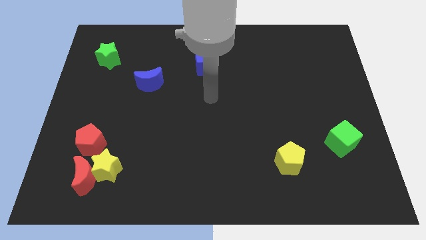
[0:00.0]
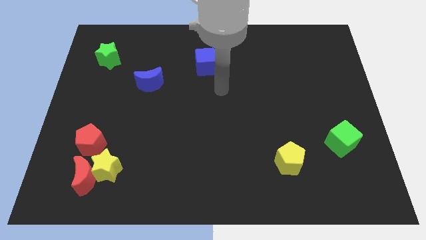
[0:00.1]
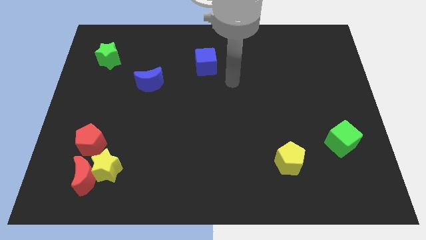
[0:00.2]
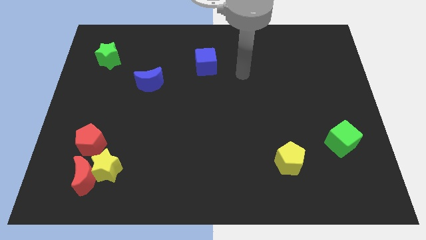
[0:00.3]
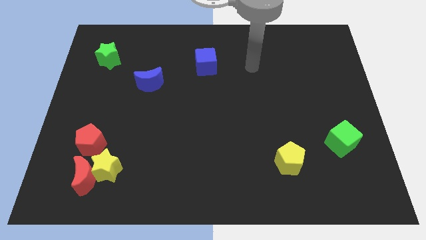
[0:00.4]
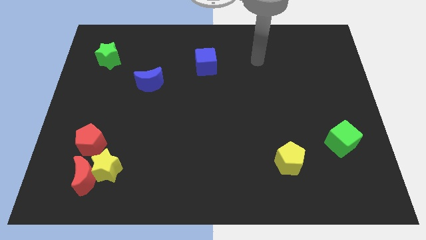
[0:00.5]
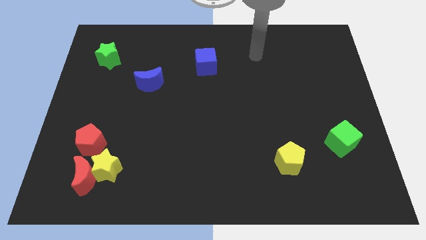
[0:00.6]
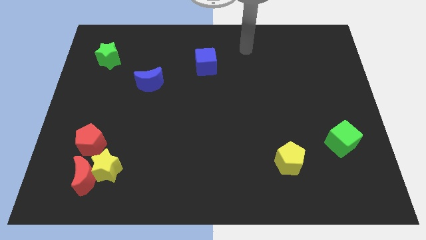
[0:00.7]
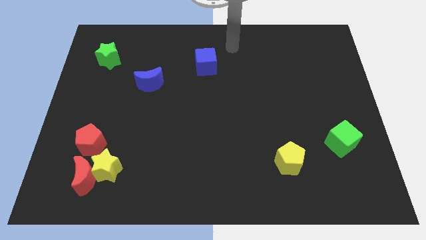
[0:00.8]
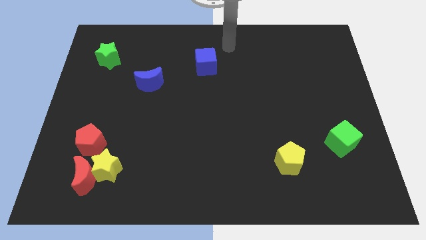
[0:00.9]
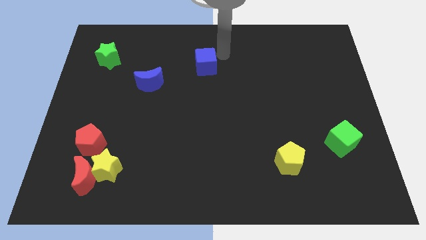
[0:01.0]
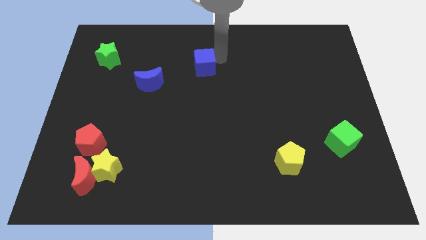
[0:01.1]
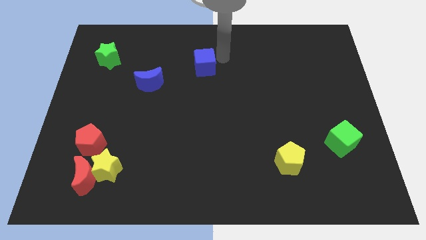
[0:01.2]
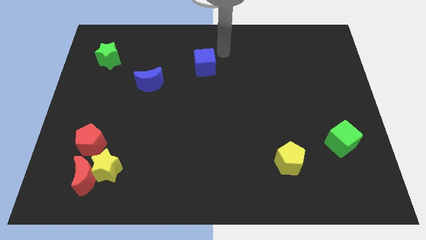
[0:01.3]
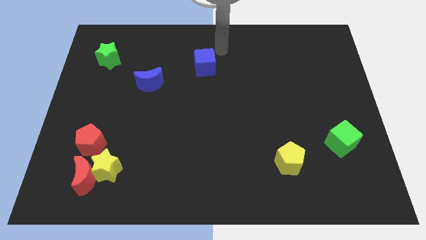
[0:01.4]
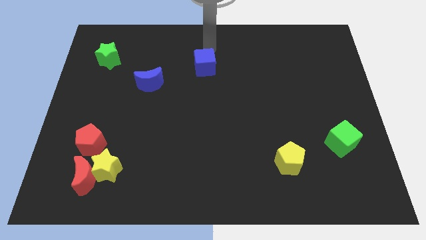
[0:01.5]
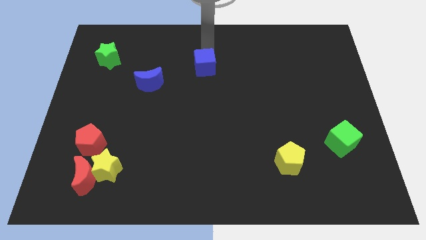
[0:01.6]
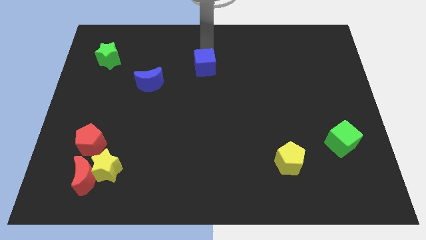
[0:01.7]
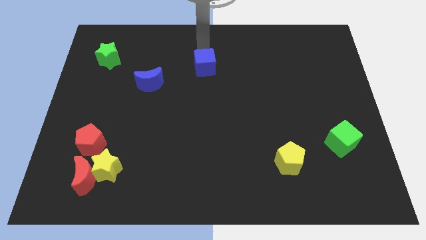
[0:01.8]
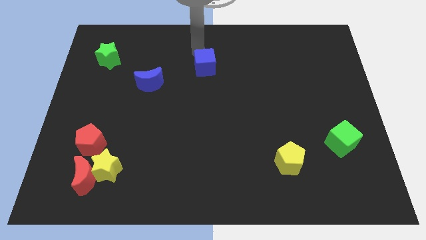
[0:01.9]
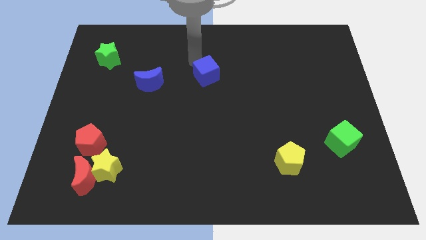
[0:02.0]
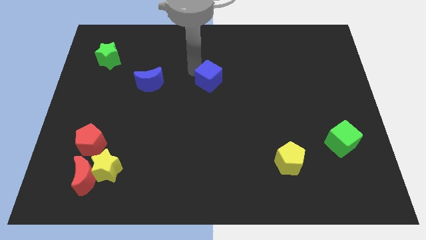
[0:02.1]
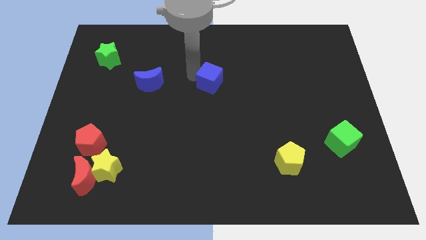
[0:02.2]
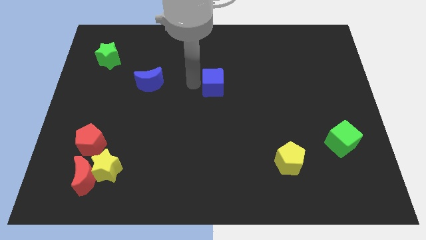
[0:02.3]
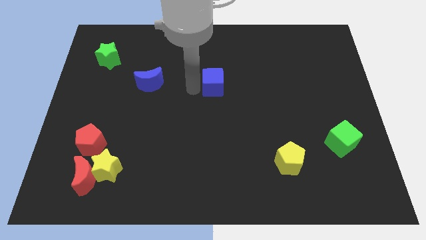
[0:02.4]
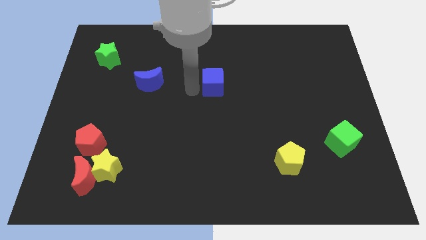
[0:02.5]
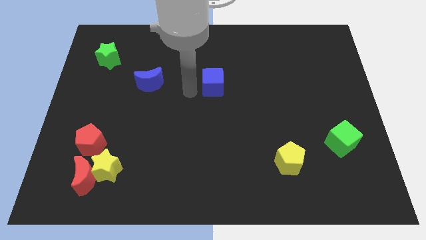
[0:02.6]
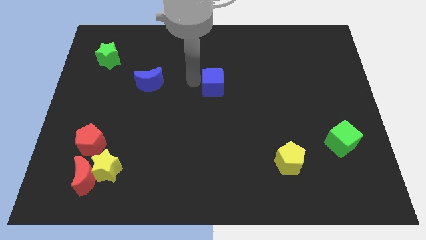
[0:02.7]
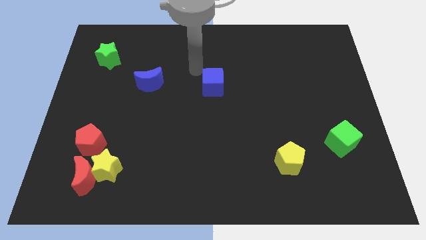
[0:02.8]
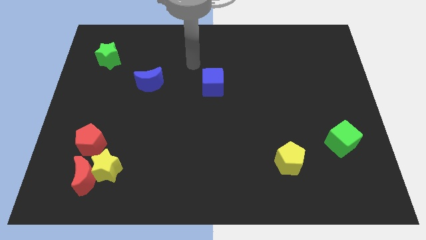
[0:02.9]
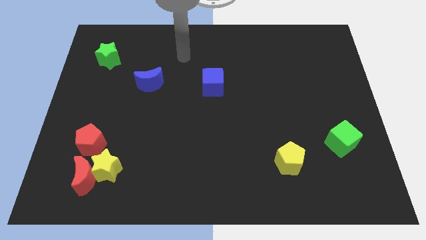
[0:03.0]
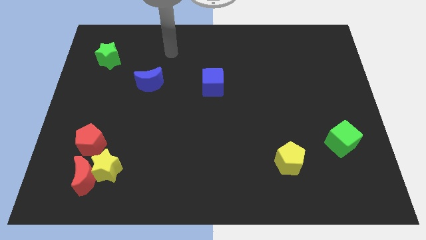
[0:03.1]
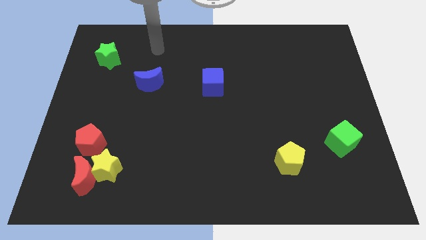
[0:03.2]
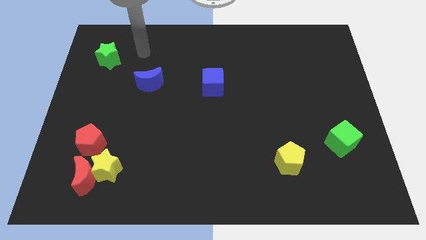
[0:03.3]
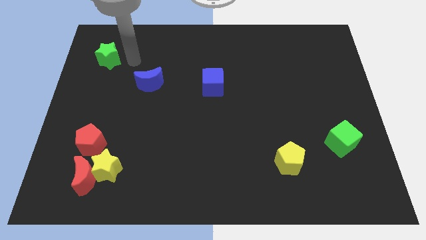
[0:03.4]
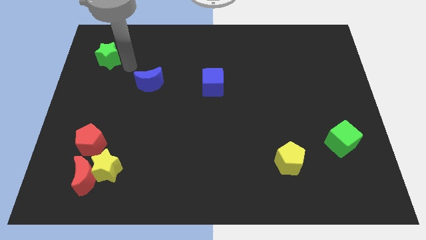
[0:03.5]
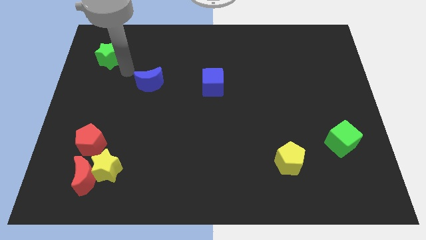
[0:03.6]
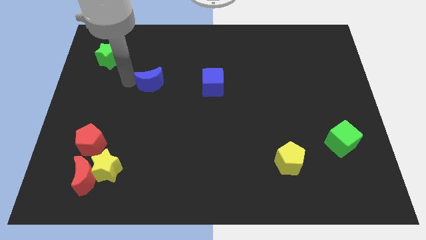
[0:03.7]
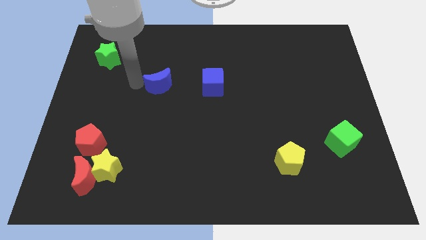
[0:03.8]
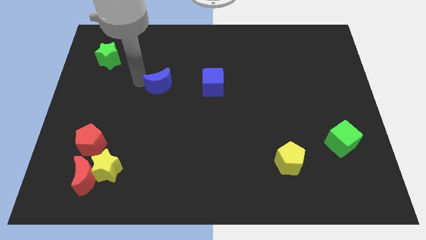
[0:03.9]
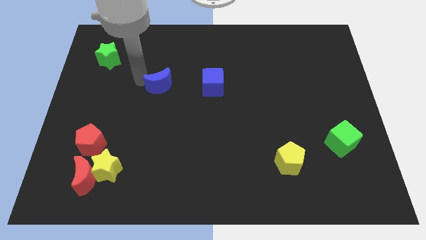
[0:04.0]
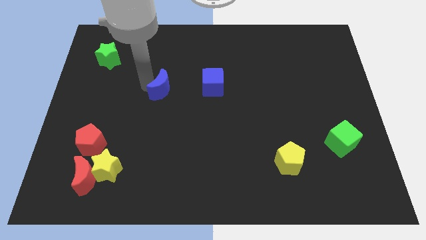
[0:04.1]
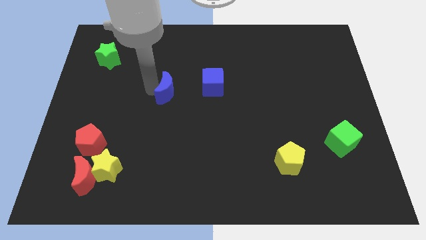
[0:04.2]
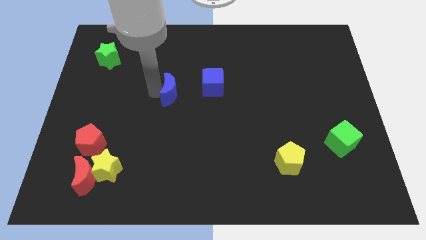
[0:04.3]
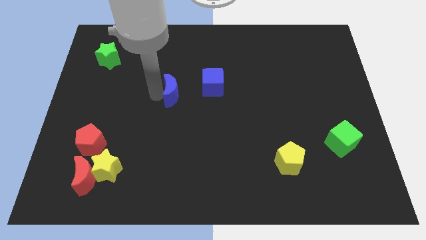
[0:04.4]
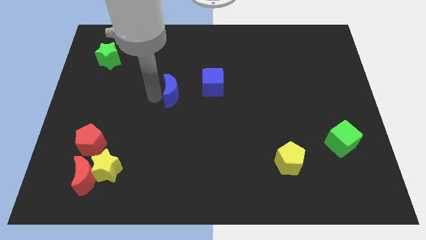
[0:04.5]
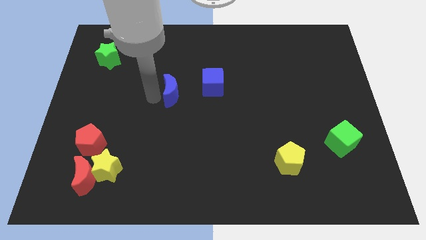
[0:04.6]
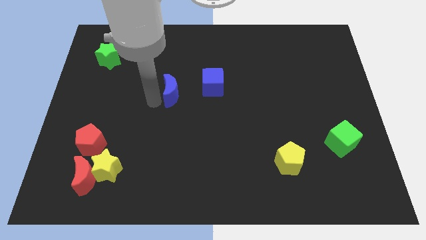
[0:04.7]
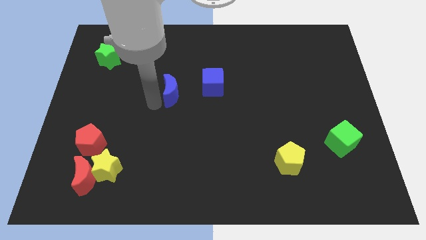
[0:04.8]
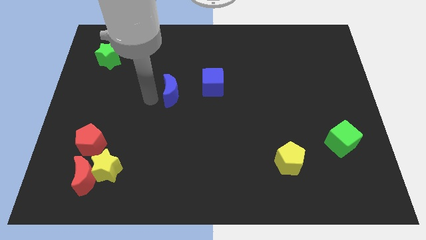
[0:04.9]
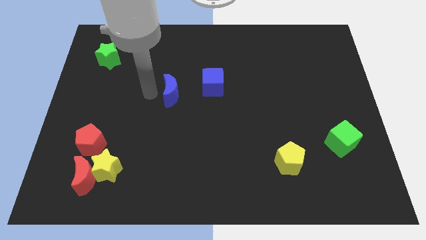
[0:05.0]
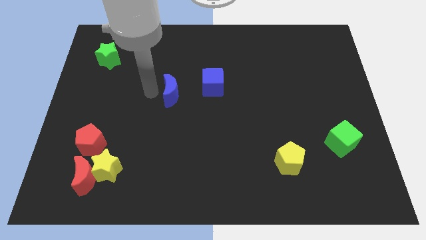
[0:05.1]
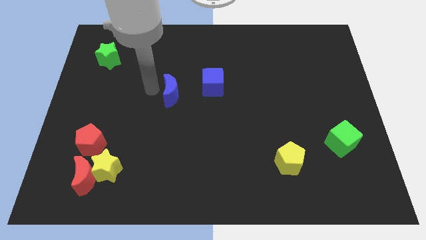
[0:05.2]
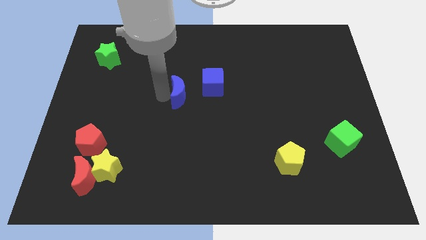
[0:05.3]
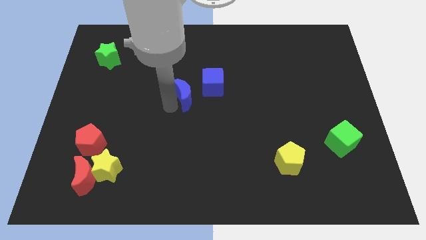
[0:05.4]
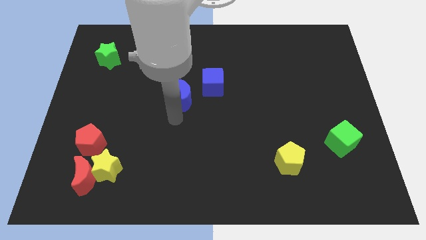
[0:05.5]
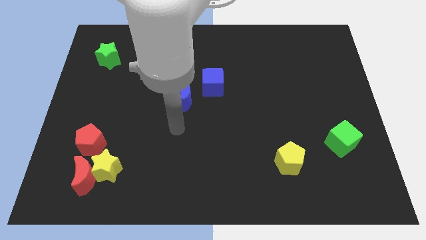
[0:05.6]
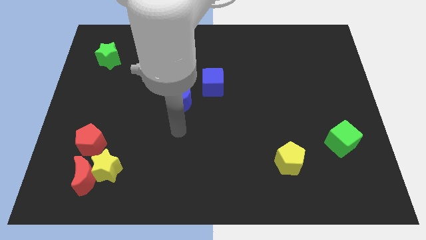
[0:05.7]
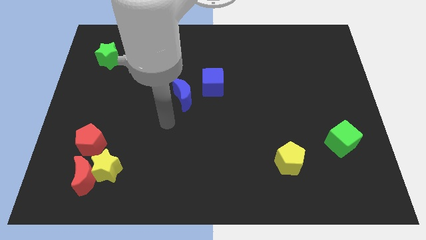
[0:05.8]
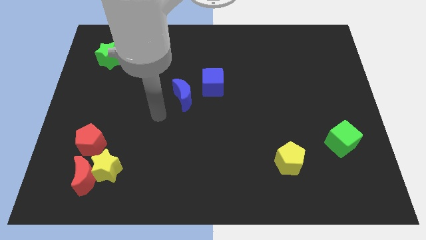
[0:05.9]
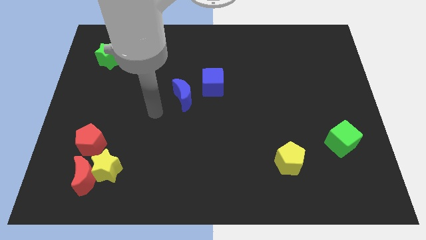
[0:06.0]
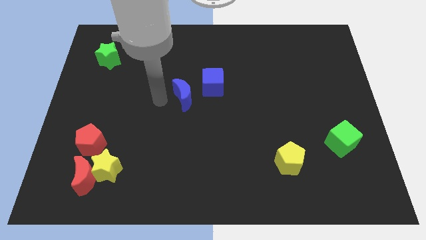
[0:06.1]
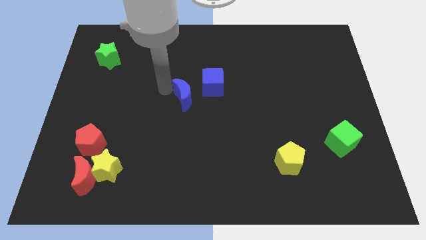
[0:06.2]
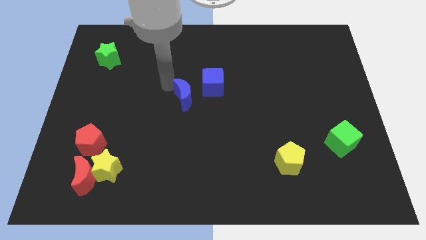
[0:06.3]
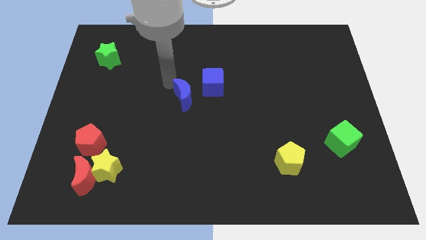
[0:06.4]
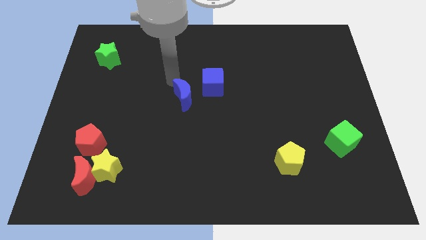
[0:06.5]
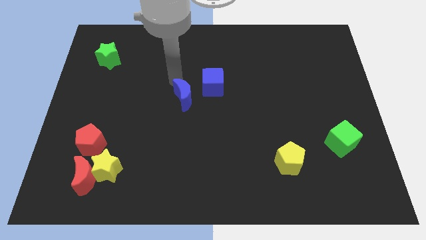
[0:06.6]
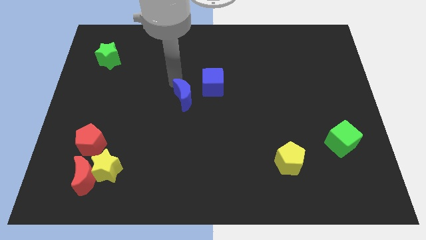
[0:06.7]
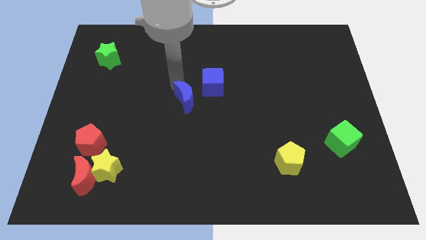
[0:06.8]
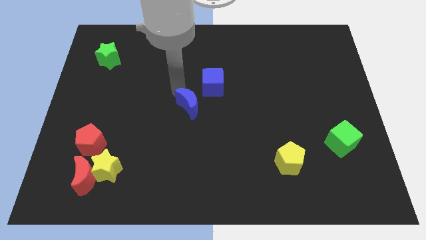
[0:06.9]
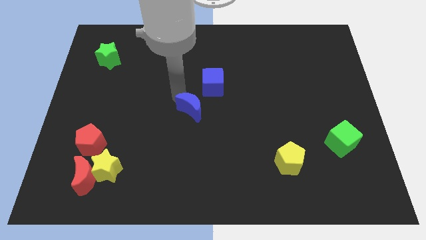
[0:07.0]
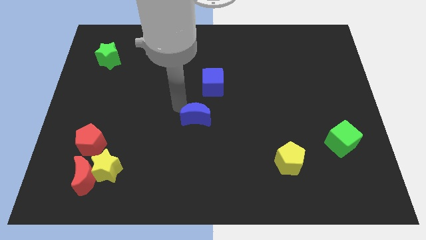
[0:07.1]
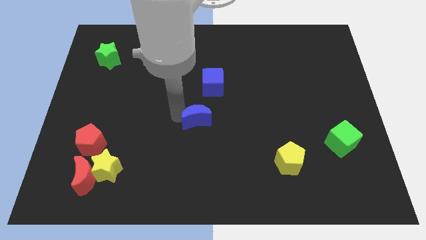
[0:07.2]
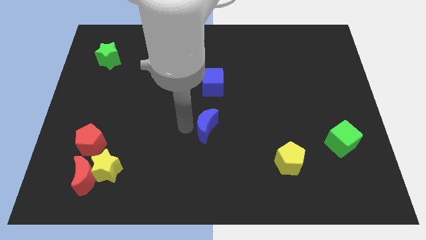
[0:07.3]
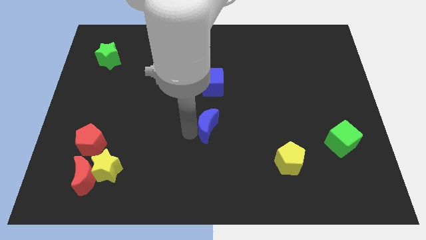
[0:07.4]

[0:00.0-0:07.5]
place the blue crescent below to the blue cube

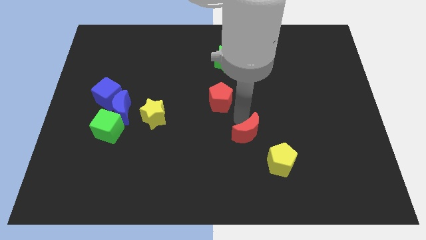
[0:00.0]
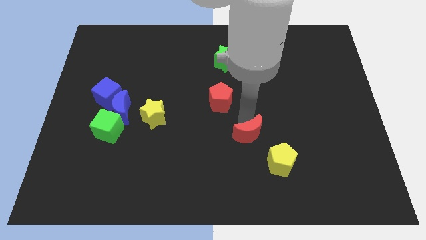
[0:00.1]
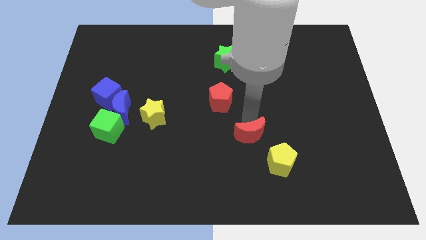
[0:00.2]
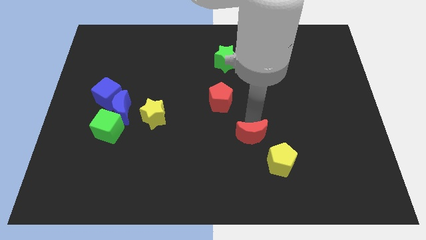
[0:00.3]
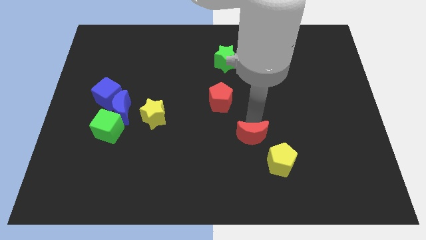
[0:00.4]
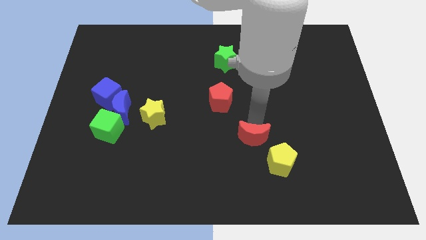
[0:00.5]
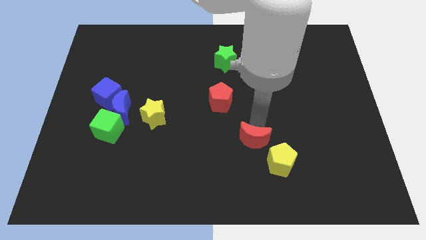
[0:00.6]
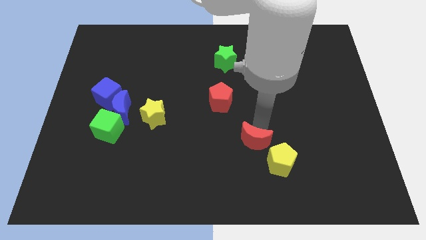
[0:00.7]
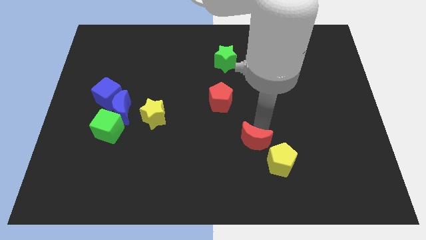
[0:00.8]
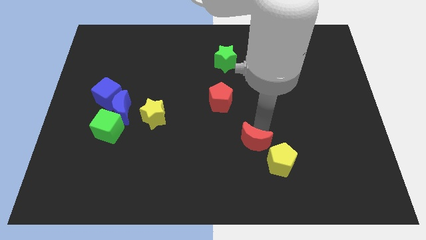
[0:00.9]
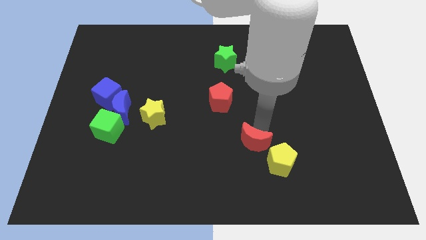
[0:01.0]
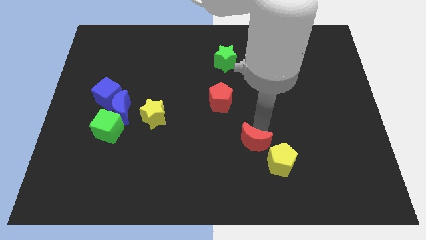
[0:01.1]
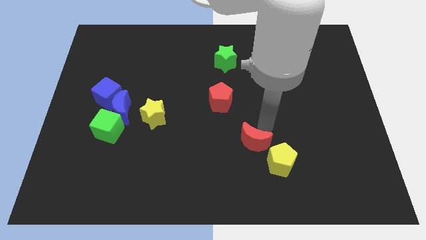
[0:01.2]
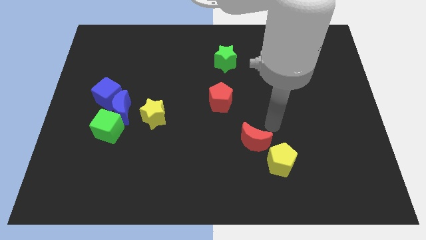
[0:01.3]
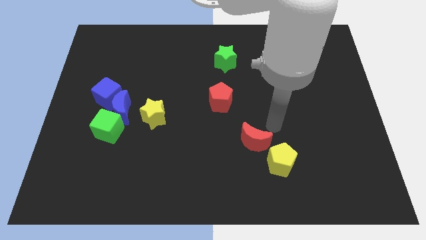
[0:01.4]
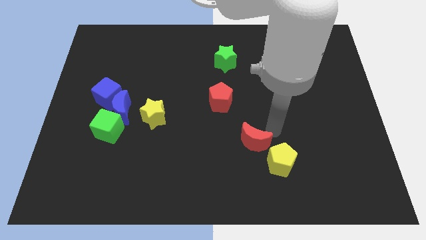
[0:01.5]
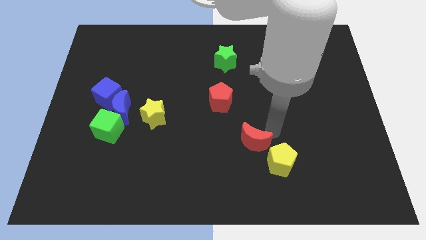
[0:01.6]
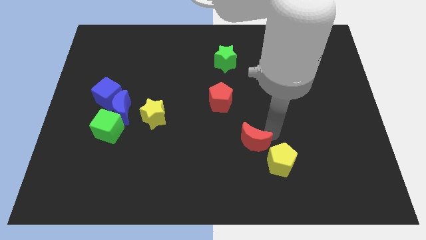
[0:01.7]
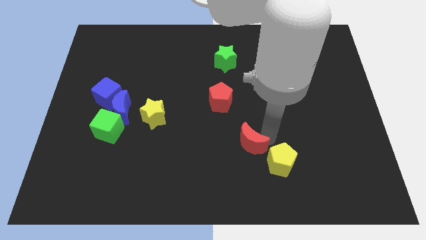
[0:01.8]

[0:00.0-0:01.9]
move the red crescent above the yellow pentagon
